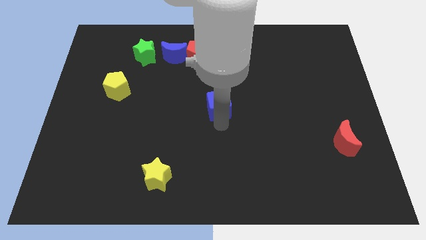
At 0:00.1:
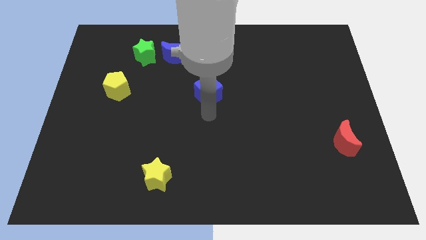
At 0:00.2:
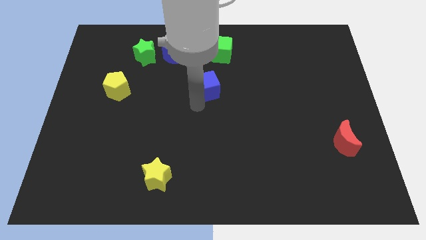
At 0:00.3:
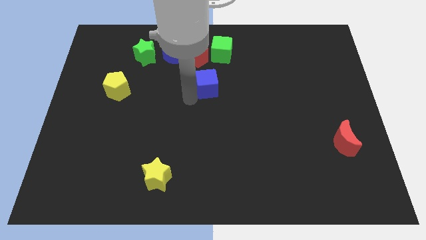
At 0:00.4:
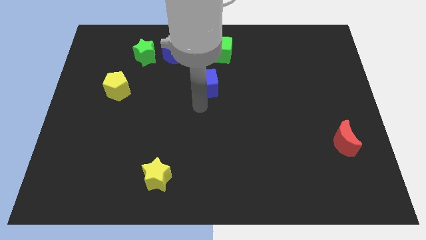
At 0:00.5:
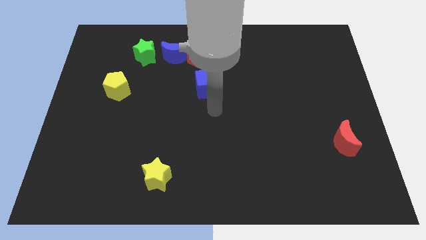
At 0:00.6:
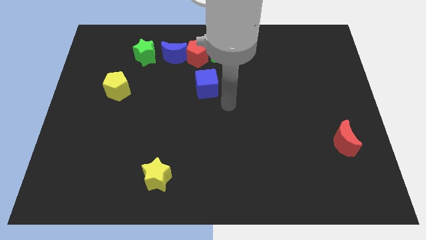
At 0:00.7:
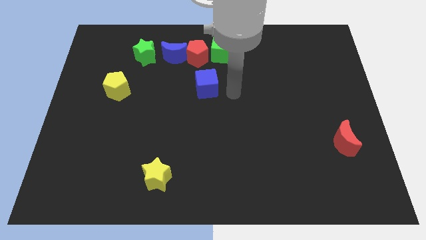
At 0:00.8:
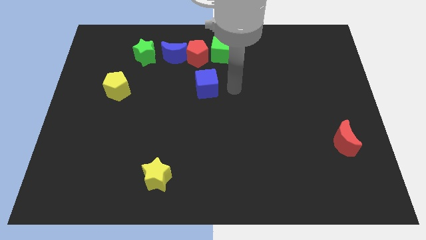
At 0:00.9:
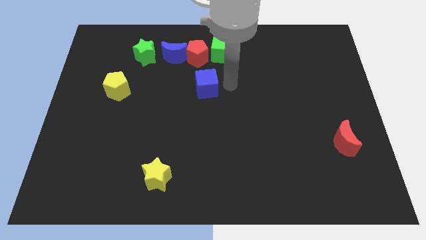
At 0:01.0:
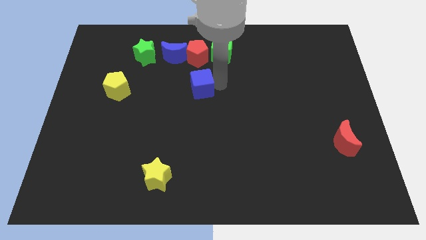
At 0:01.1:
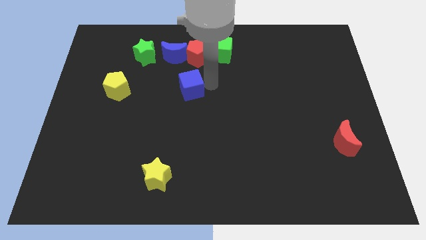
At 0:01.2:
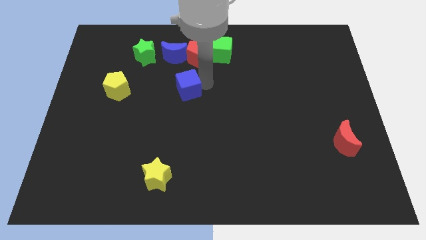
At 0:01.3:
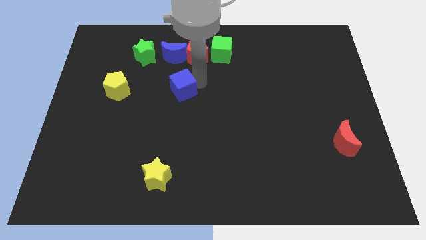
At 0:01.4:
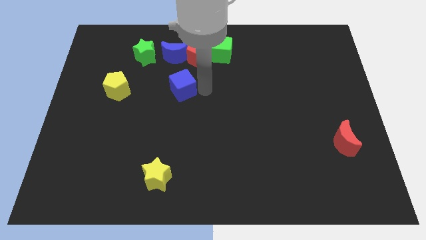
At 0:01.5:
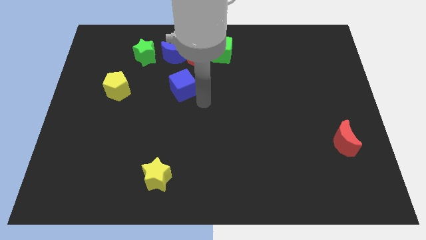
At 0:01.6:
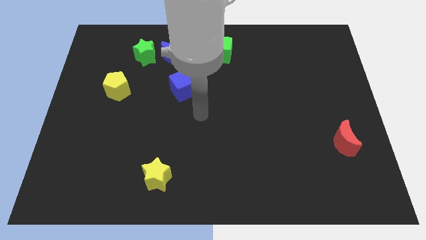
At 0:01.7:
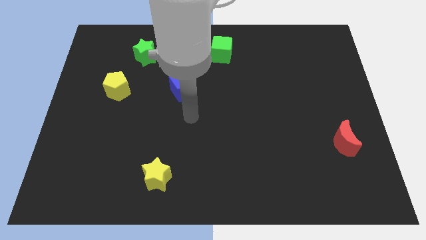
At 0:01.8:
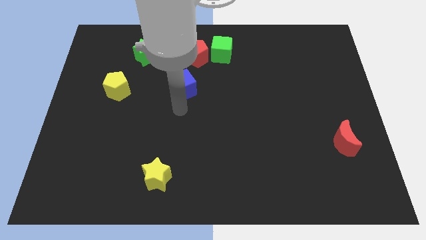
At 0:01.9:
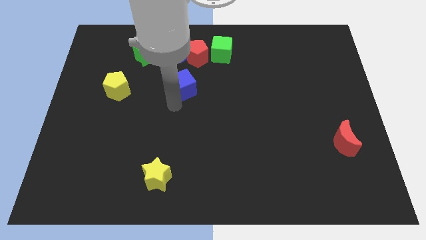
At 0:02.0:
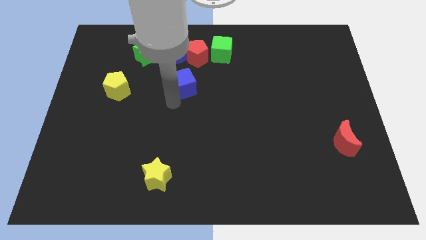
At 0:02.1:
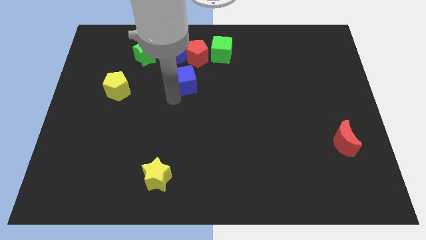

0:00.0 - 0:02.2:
slide the blue cube diagonal to the right of yellow pentagon

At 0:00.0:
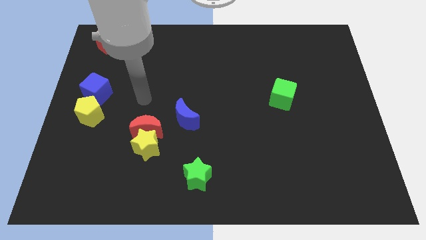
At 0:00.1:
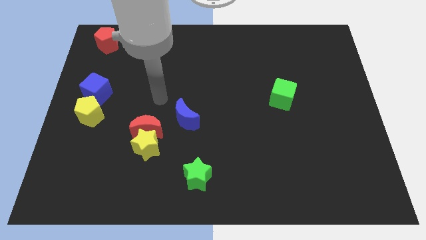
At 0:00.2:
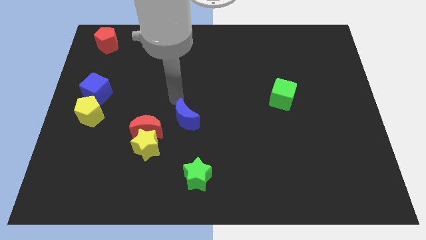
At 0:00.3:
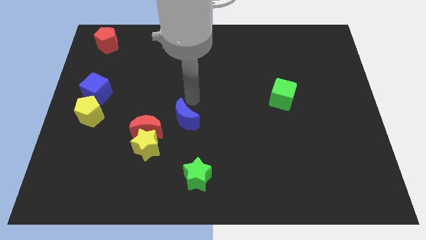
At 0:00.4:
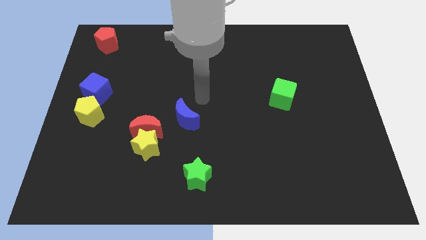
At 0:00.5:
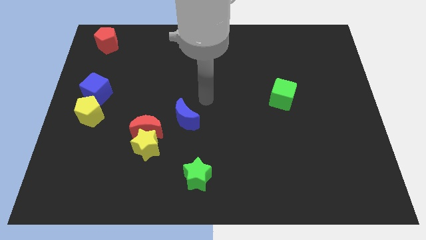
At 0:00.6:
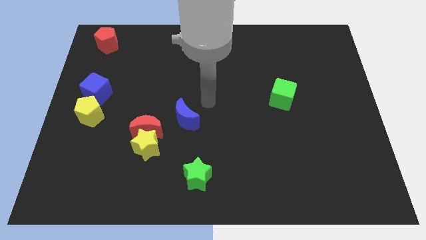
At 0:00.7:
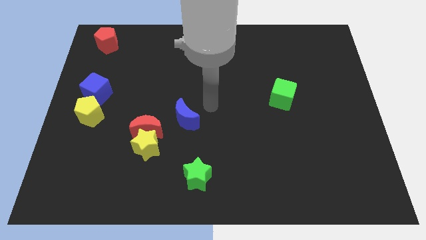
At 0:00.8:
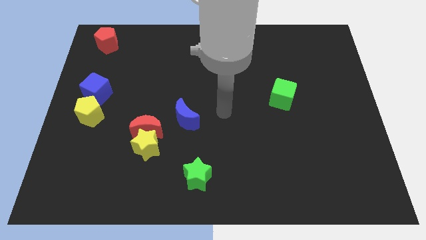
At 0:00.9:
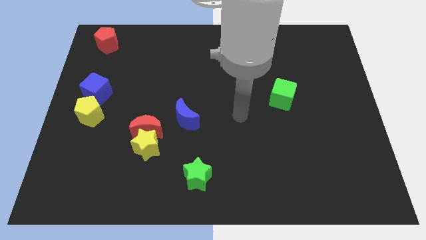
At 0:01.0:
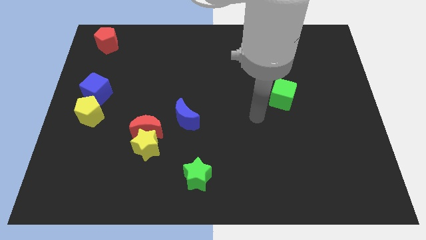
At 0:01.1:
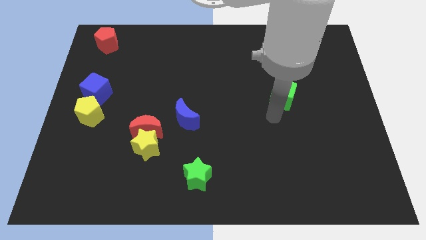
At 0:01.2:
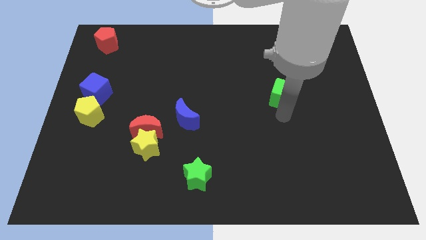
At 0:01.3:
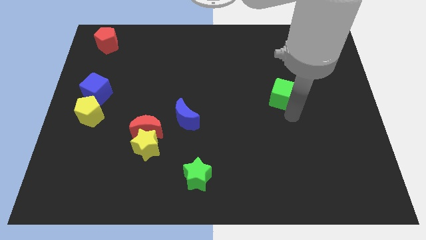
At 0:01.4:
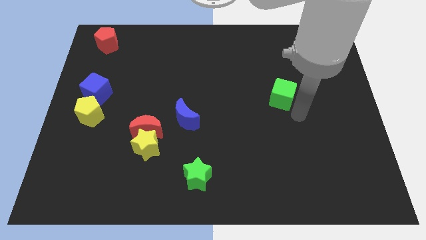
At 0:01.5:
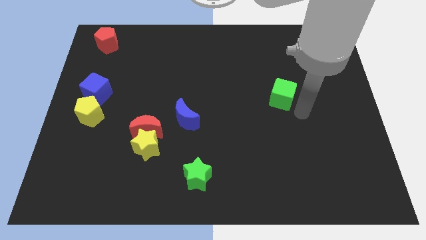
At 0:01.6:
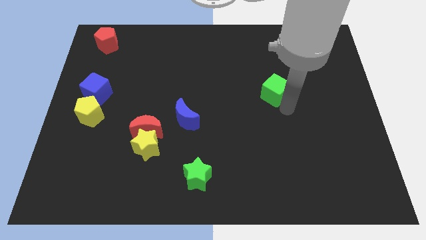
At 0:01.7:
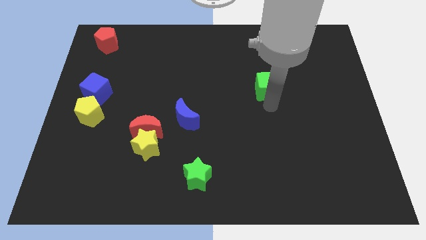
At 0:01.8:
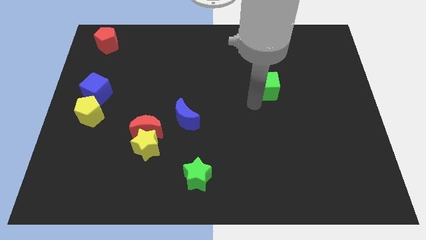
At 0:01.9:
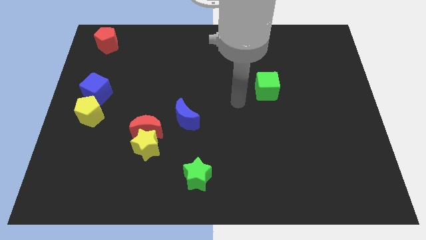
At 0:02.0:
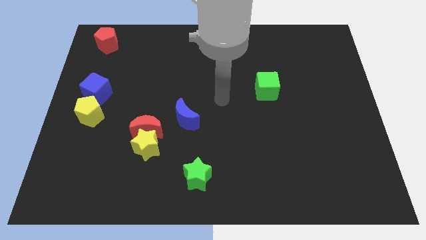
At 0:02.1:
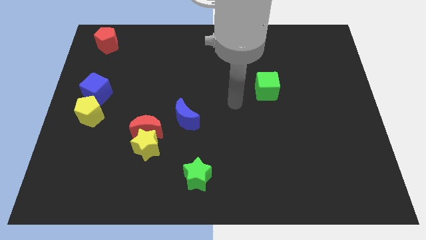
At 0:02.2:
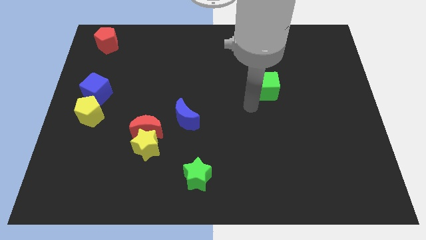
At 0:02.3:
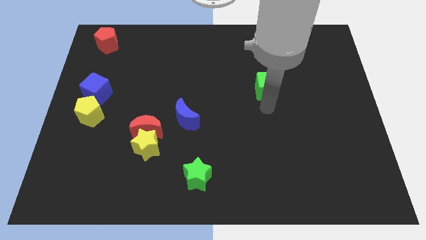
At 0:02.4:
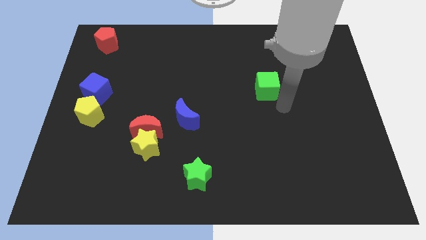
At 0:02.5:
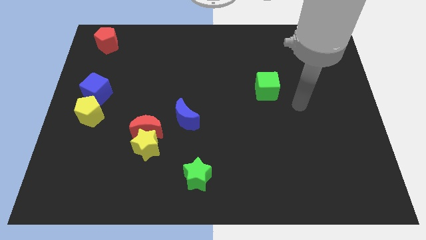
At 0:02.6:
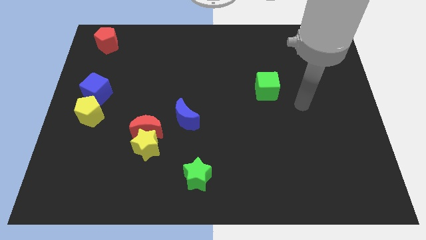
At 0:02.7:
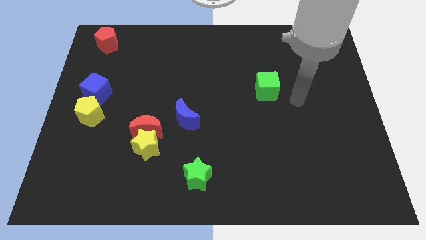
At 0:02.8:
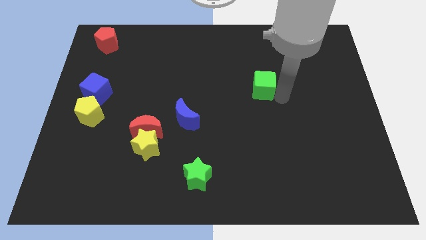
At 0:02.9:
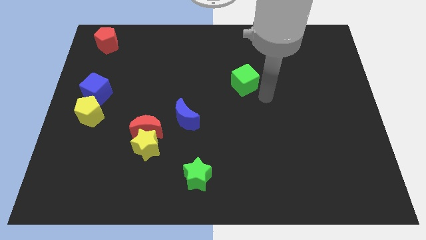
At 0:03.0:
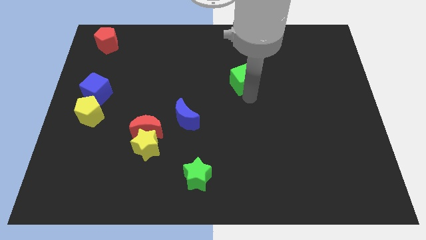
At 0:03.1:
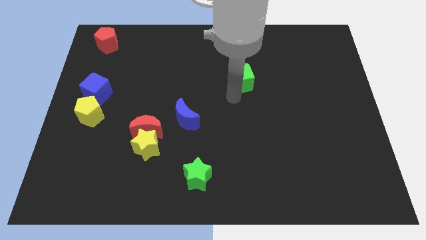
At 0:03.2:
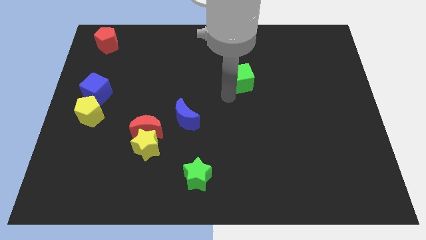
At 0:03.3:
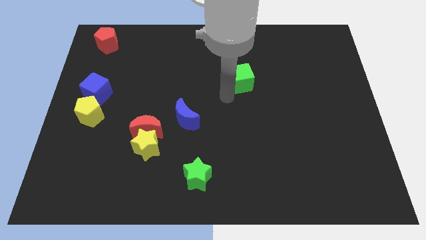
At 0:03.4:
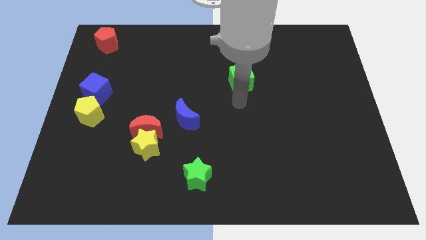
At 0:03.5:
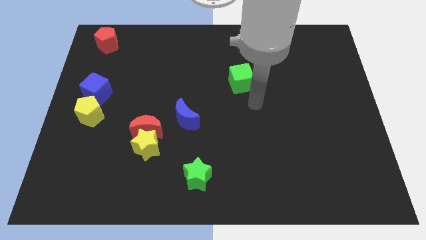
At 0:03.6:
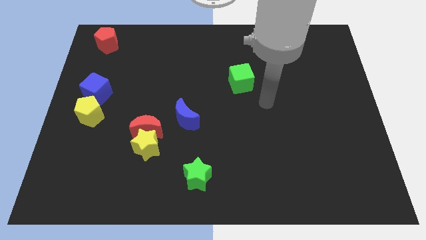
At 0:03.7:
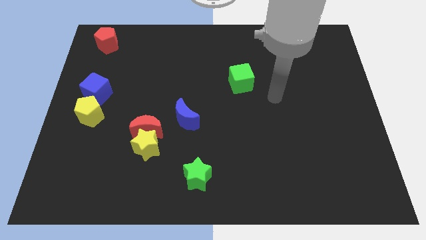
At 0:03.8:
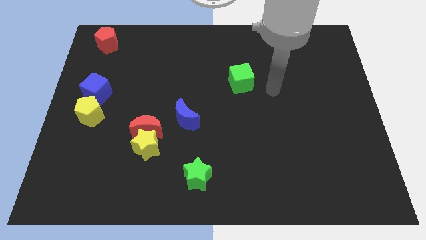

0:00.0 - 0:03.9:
move the green cube towards the center of the board

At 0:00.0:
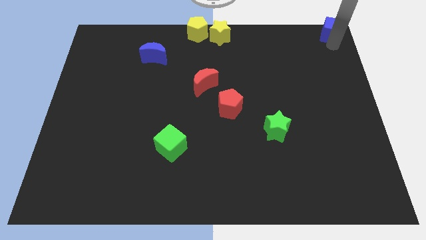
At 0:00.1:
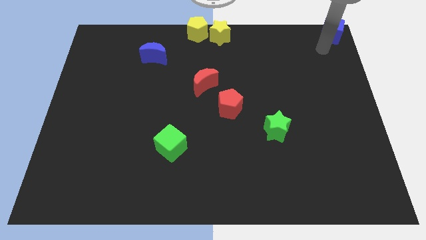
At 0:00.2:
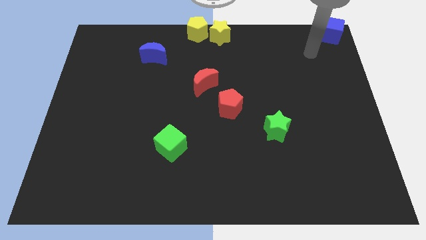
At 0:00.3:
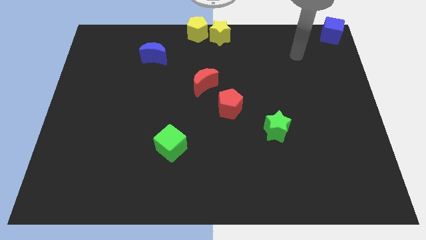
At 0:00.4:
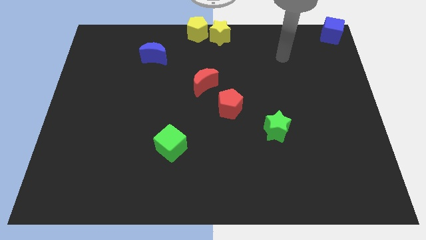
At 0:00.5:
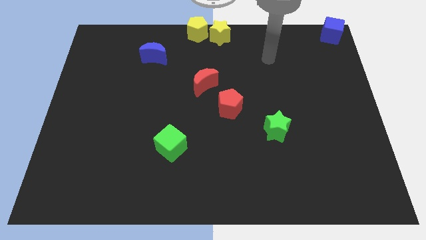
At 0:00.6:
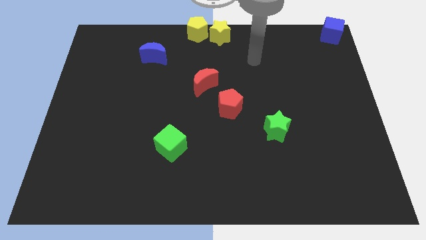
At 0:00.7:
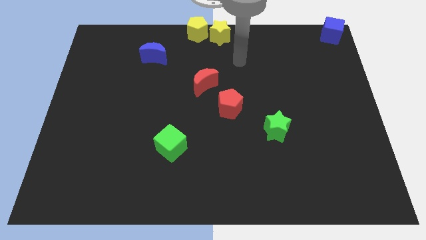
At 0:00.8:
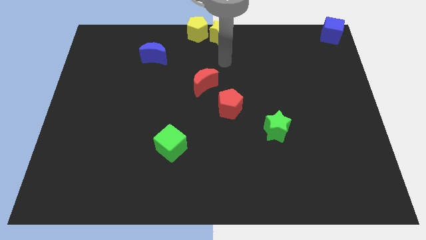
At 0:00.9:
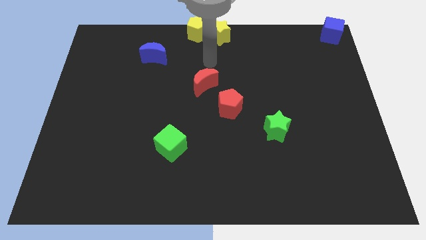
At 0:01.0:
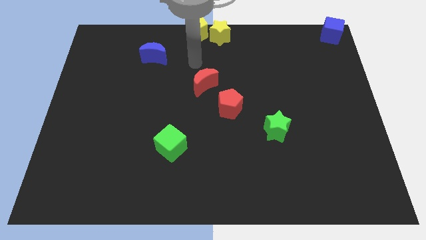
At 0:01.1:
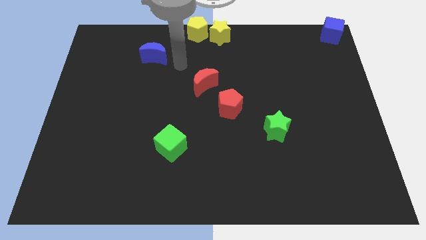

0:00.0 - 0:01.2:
put your hand between the blue moon and red moon

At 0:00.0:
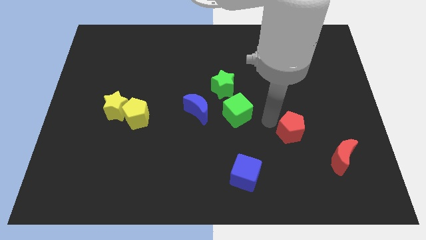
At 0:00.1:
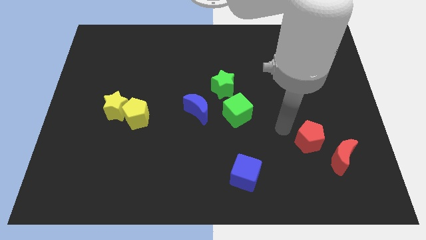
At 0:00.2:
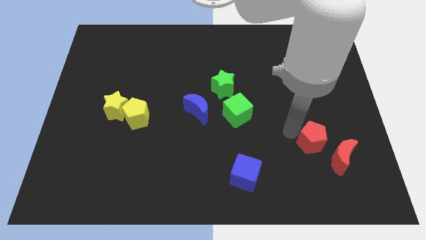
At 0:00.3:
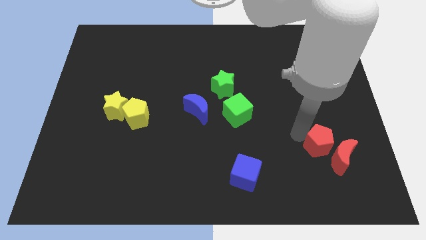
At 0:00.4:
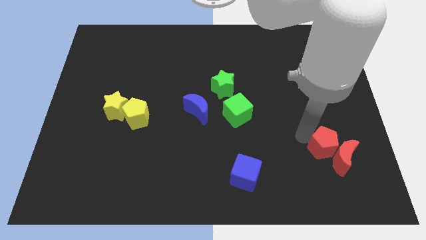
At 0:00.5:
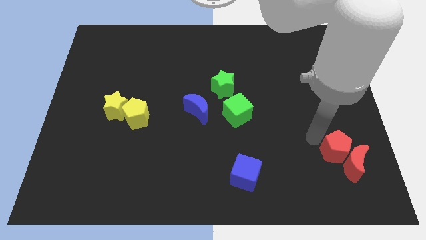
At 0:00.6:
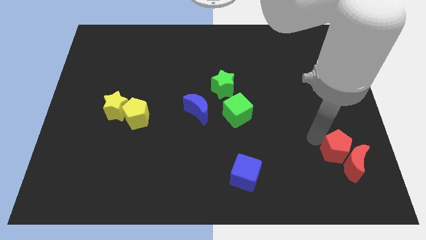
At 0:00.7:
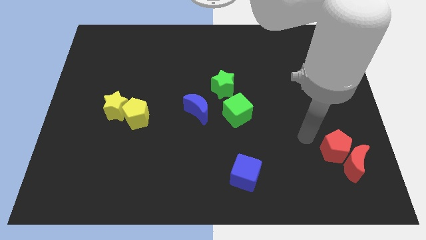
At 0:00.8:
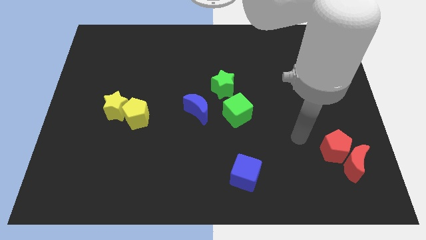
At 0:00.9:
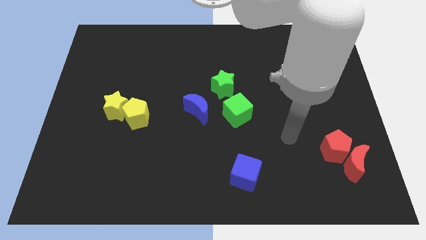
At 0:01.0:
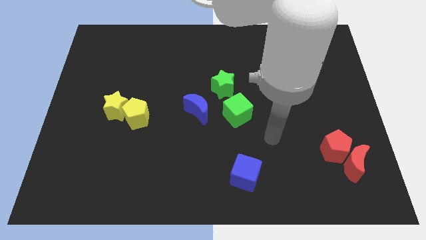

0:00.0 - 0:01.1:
move red pentagon in to red crescent

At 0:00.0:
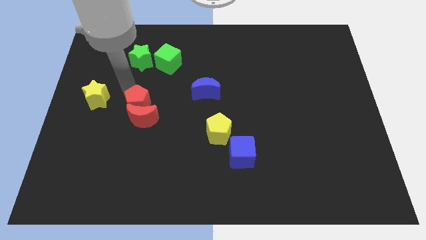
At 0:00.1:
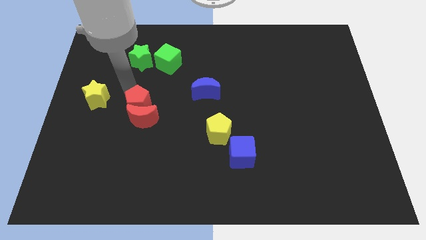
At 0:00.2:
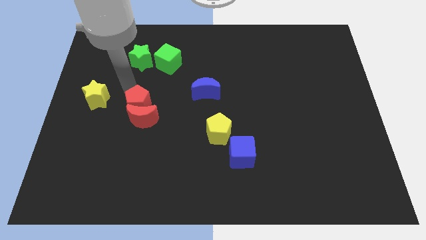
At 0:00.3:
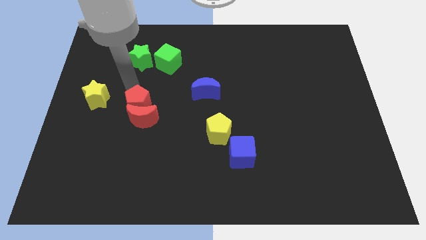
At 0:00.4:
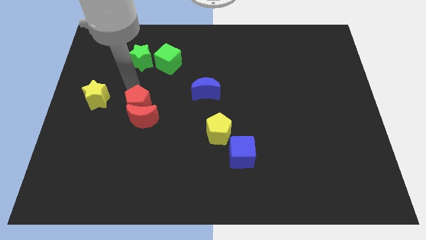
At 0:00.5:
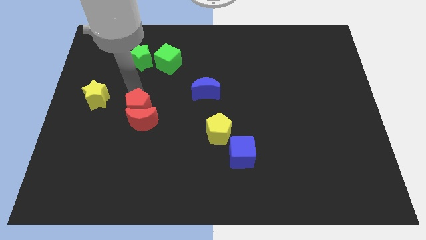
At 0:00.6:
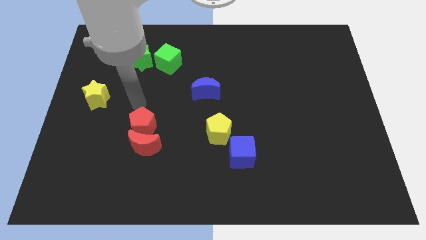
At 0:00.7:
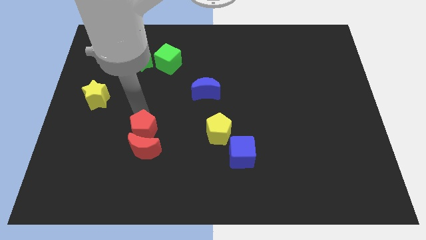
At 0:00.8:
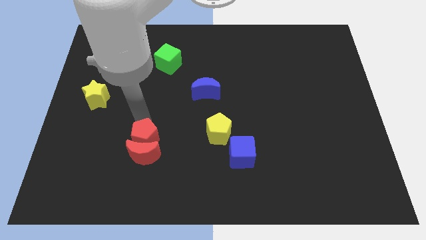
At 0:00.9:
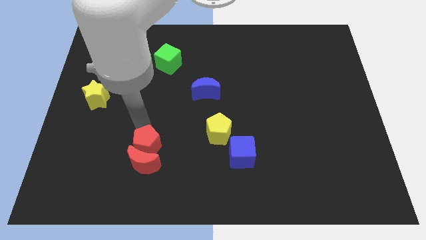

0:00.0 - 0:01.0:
move the red blocks slightly to the bottom
